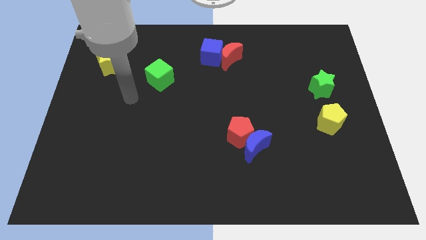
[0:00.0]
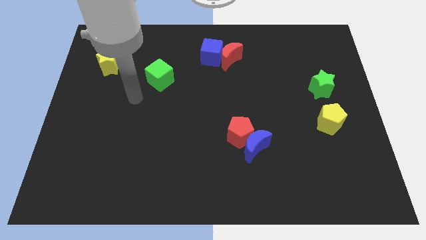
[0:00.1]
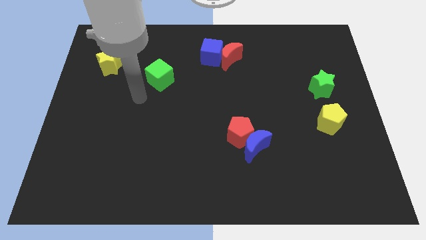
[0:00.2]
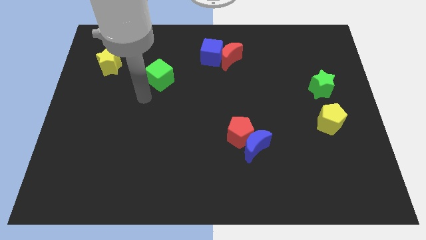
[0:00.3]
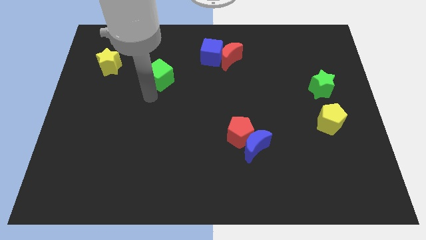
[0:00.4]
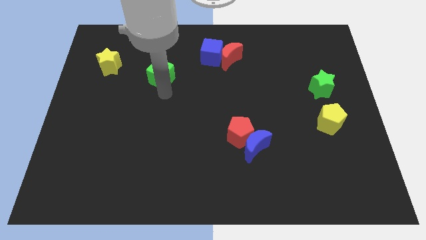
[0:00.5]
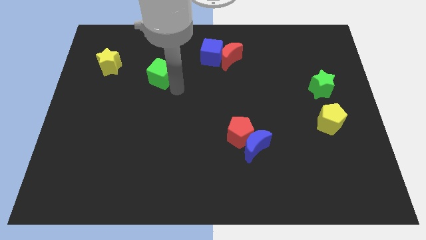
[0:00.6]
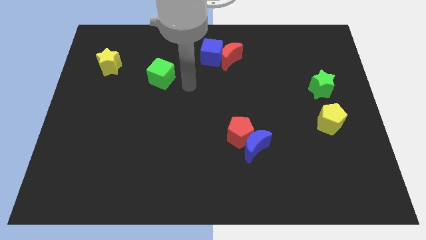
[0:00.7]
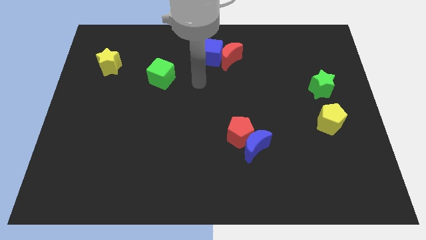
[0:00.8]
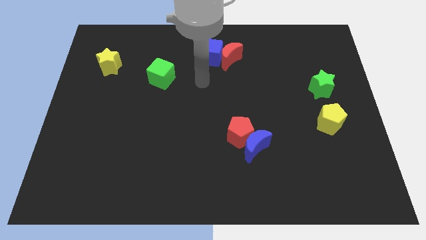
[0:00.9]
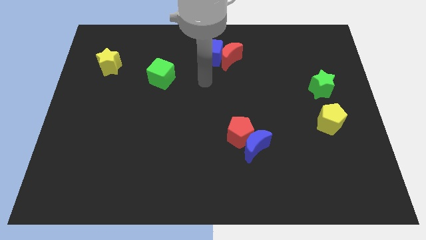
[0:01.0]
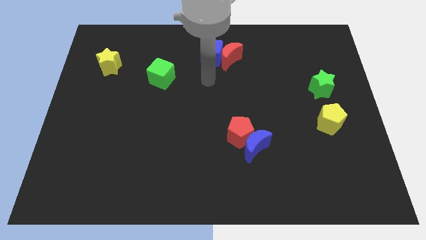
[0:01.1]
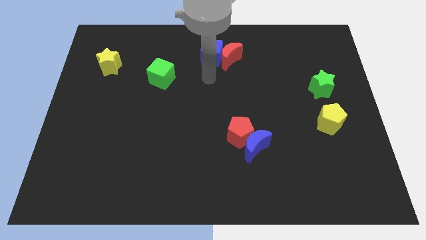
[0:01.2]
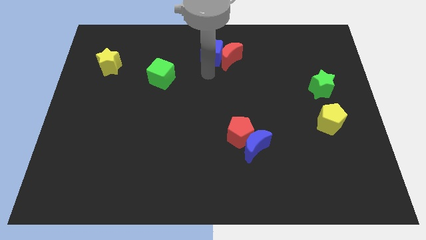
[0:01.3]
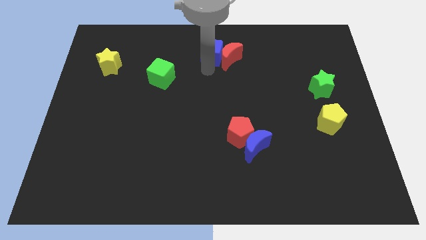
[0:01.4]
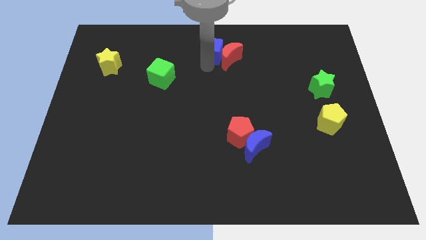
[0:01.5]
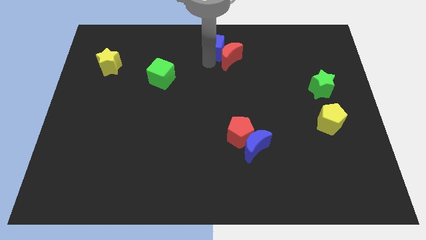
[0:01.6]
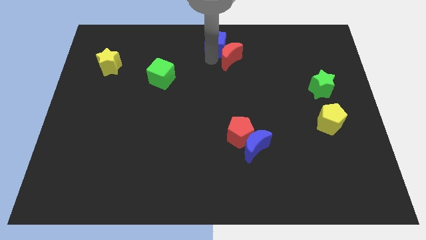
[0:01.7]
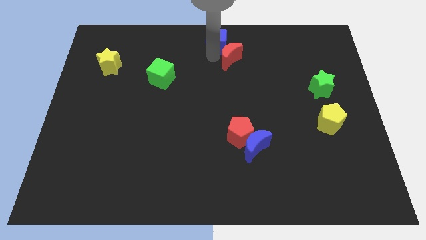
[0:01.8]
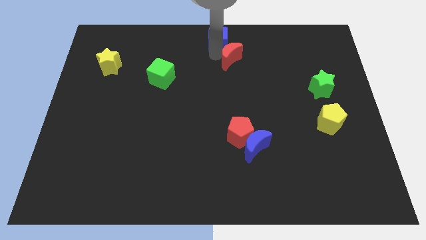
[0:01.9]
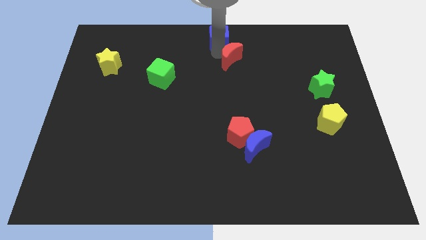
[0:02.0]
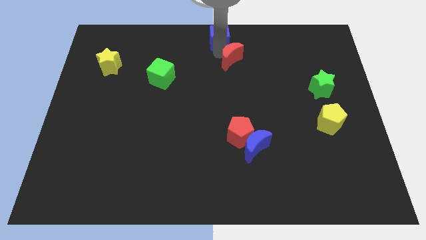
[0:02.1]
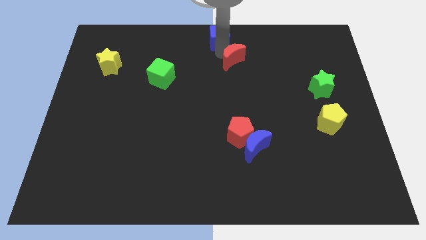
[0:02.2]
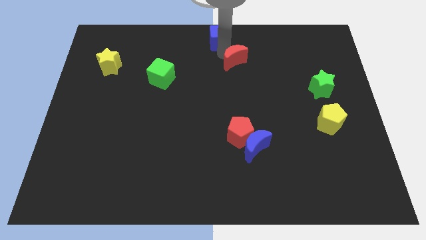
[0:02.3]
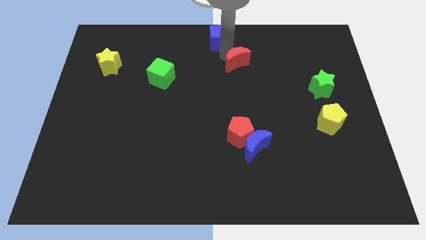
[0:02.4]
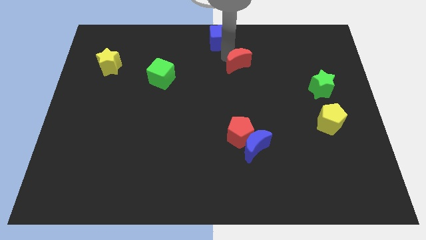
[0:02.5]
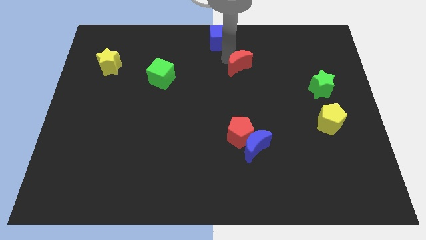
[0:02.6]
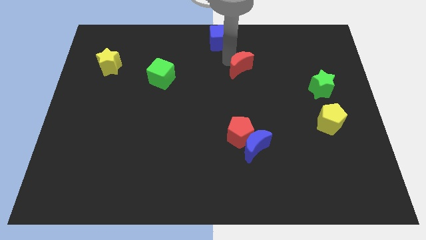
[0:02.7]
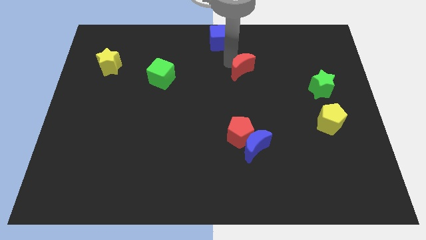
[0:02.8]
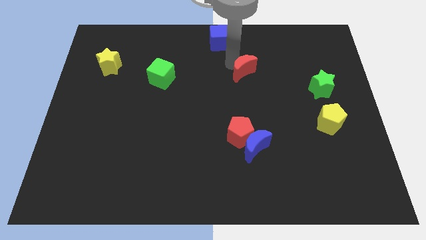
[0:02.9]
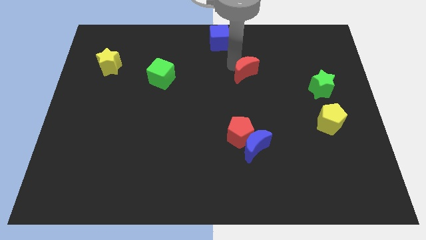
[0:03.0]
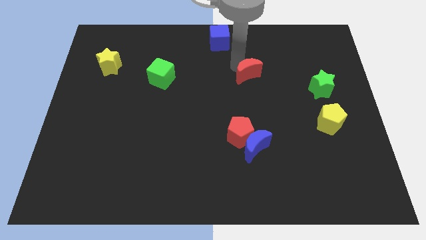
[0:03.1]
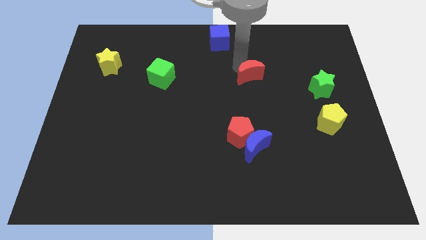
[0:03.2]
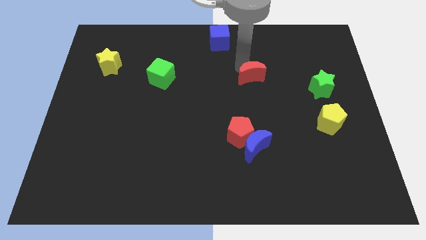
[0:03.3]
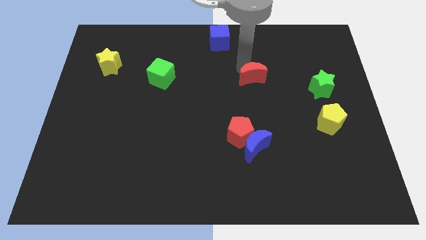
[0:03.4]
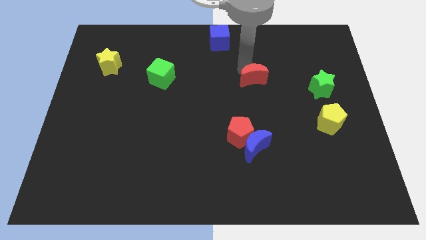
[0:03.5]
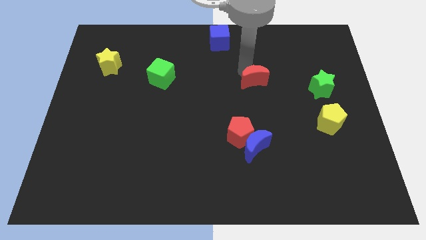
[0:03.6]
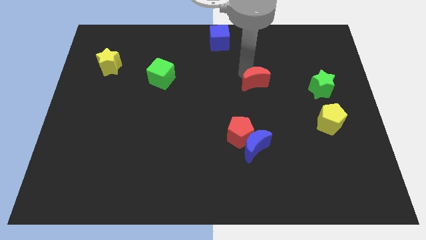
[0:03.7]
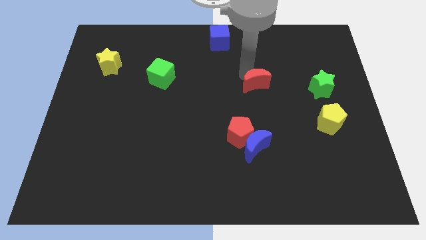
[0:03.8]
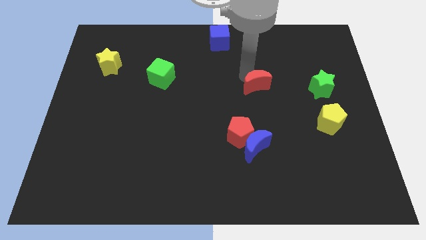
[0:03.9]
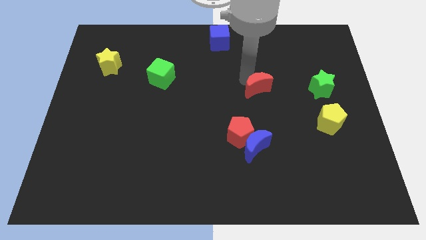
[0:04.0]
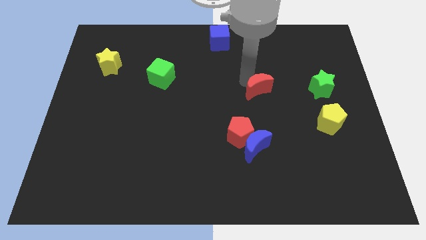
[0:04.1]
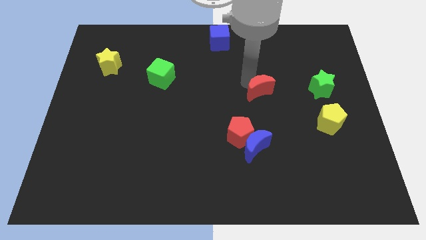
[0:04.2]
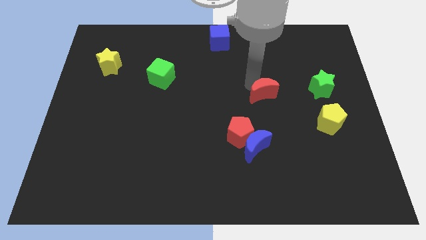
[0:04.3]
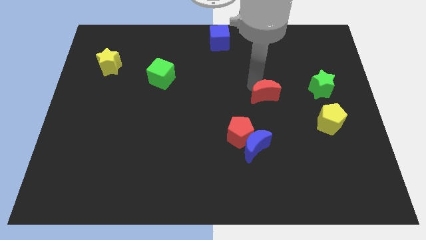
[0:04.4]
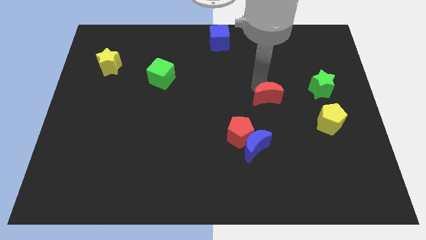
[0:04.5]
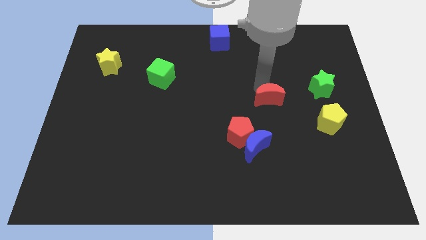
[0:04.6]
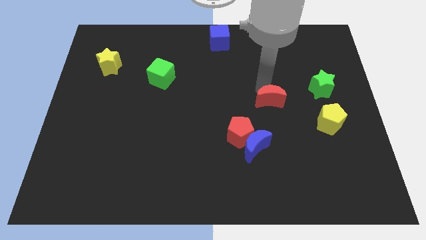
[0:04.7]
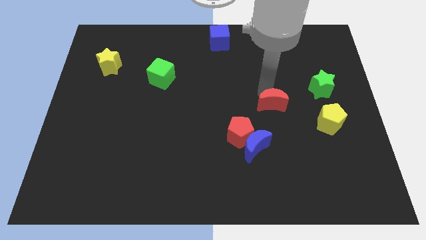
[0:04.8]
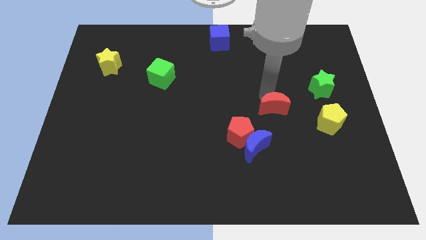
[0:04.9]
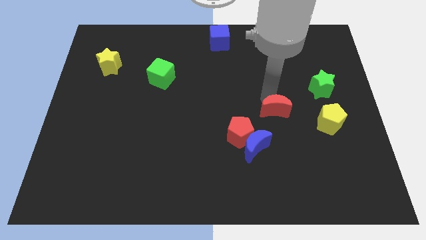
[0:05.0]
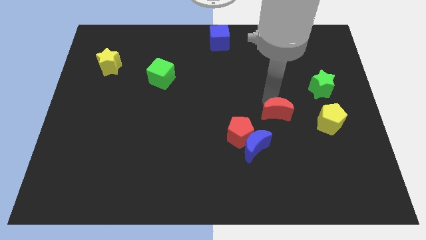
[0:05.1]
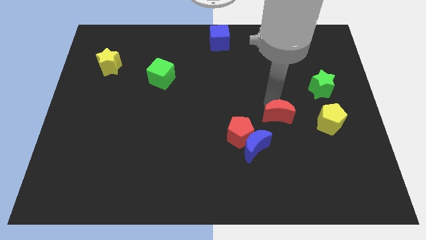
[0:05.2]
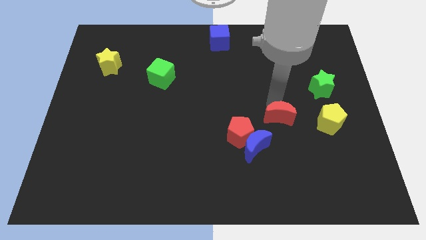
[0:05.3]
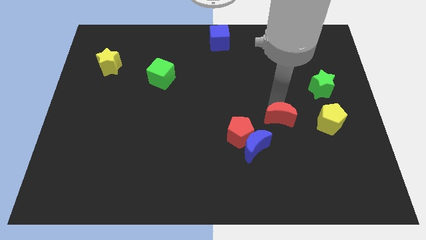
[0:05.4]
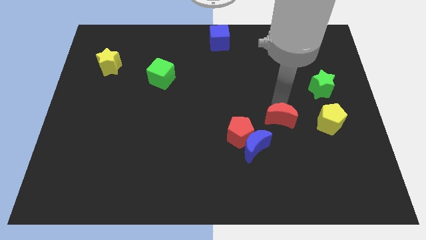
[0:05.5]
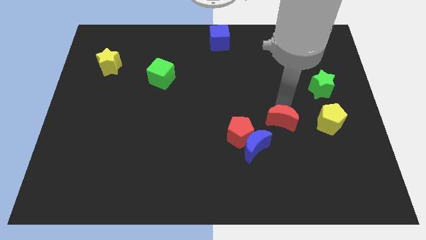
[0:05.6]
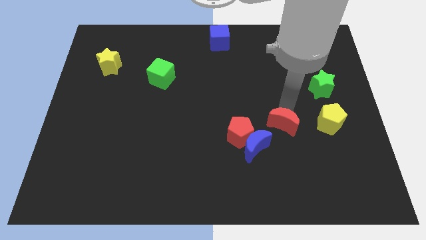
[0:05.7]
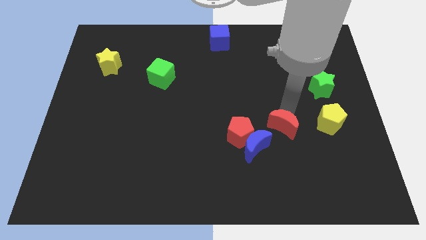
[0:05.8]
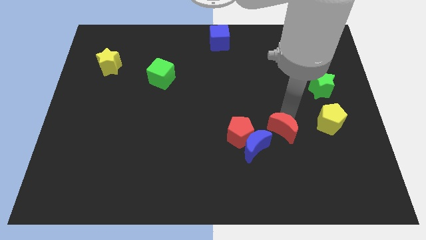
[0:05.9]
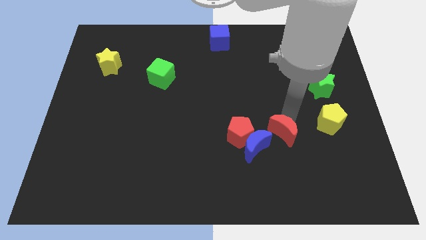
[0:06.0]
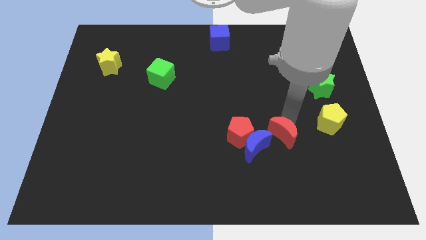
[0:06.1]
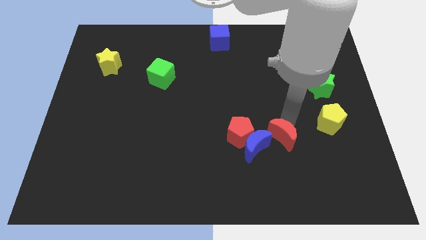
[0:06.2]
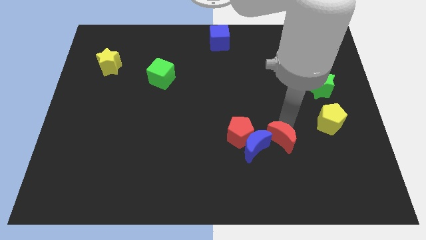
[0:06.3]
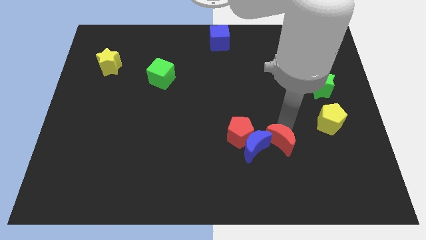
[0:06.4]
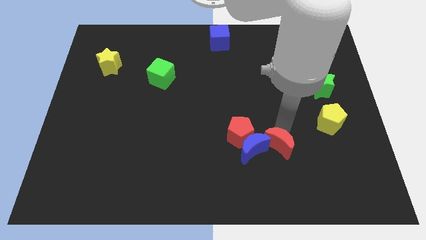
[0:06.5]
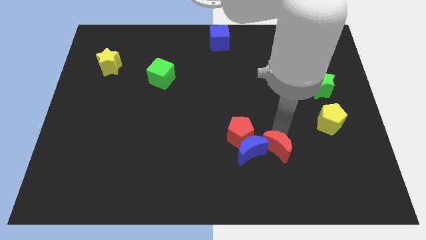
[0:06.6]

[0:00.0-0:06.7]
put the red moon close to the blue moon

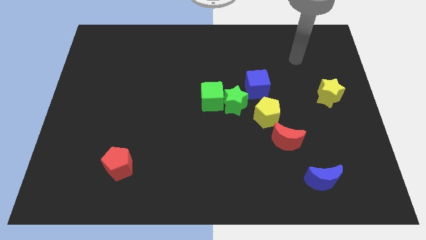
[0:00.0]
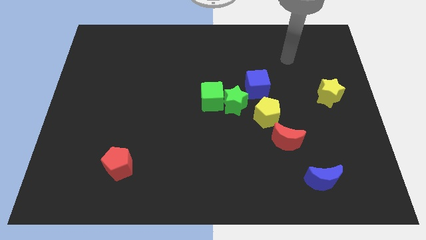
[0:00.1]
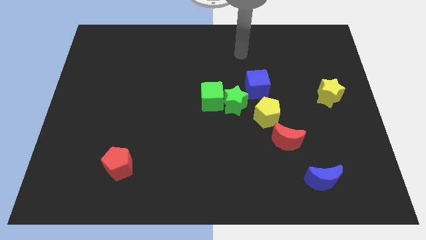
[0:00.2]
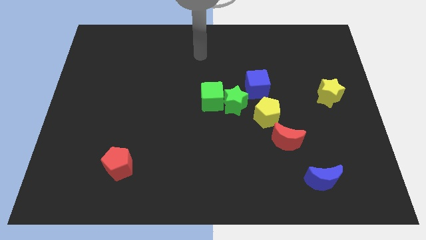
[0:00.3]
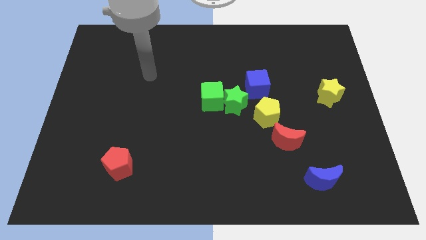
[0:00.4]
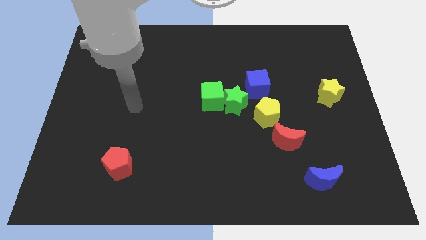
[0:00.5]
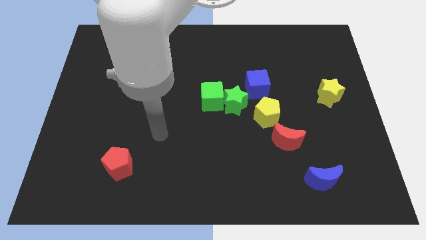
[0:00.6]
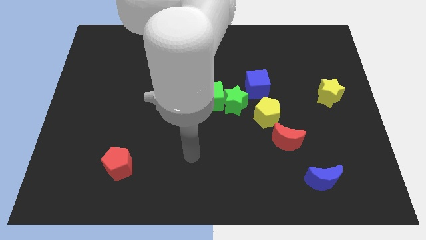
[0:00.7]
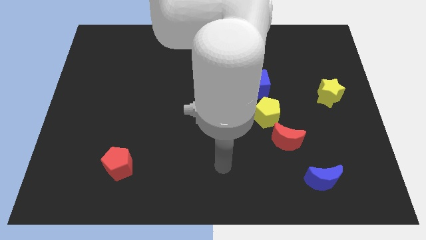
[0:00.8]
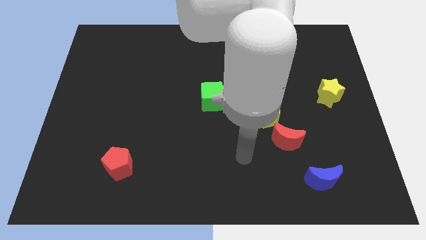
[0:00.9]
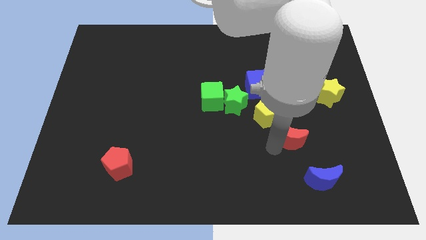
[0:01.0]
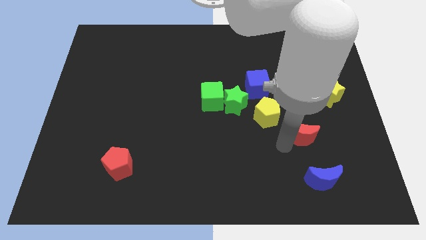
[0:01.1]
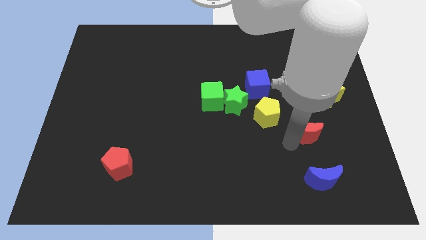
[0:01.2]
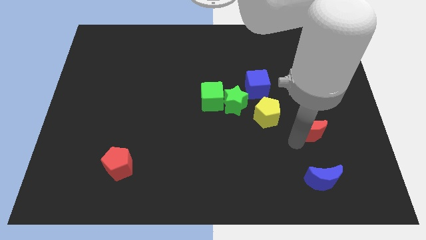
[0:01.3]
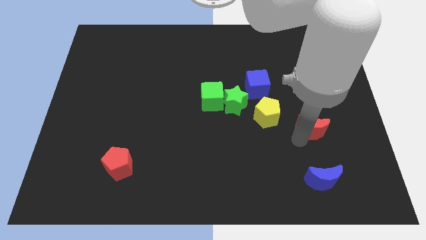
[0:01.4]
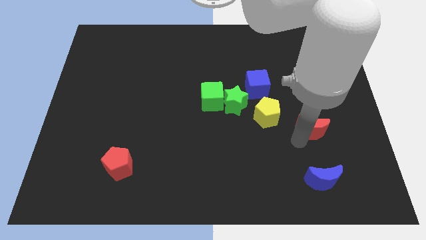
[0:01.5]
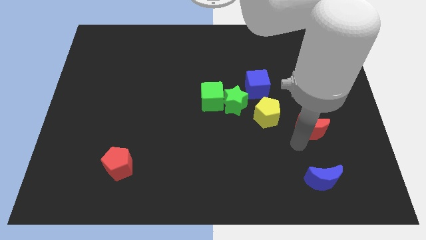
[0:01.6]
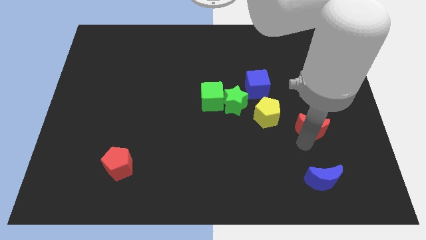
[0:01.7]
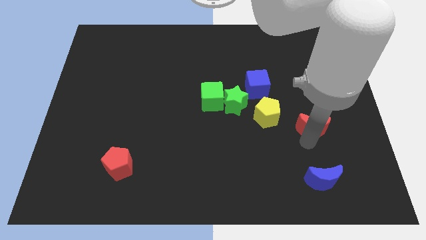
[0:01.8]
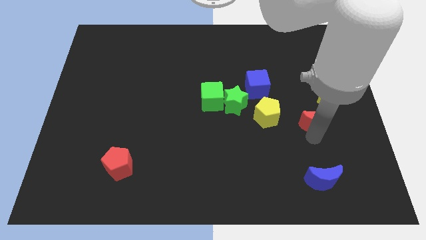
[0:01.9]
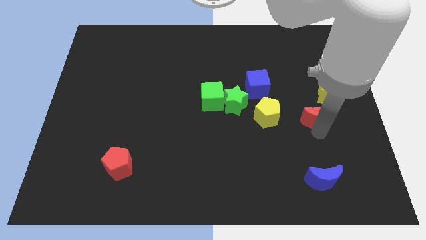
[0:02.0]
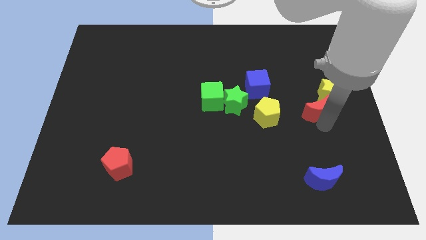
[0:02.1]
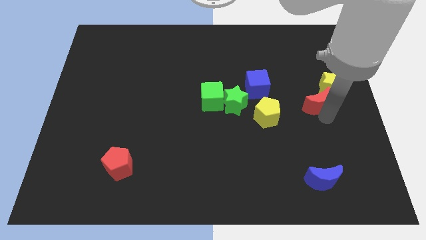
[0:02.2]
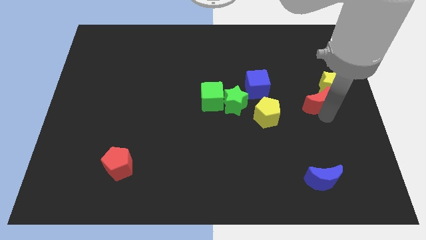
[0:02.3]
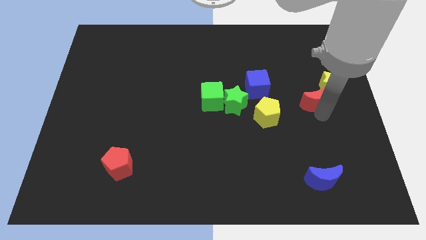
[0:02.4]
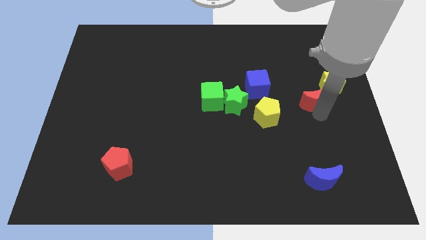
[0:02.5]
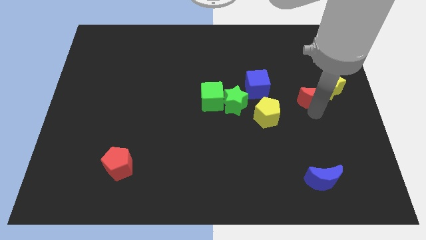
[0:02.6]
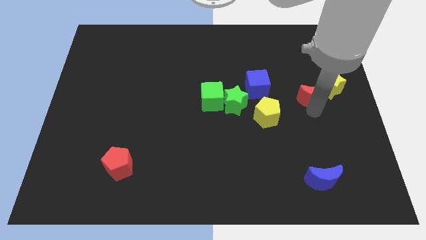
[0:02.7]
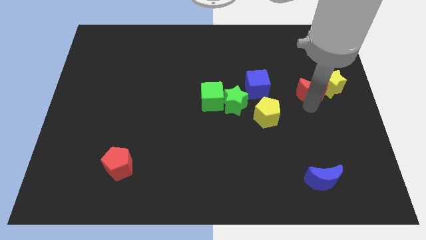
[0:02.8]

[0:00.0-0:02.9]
slide the red moon next to the yellow star
